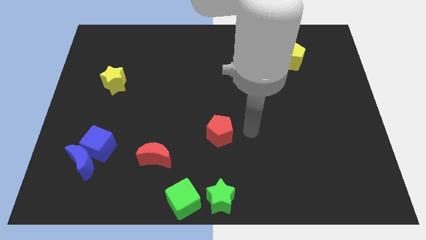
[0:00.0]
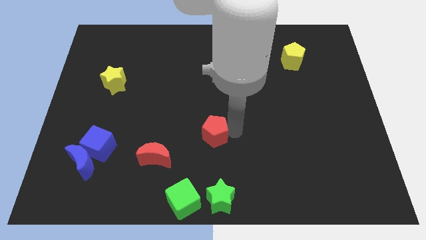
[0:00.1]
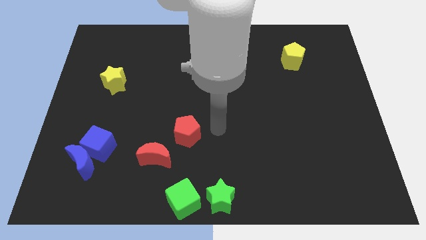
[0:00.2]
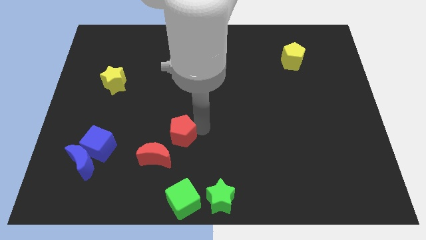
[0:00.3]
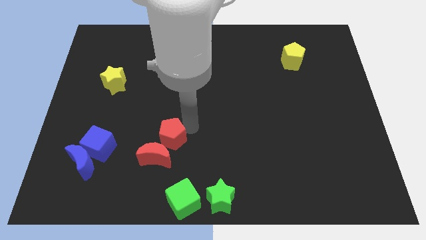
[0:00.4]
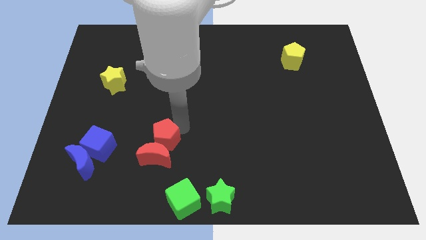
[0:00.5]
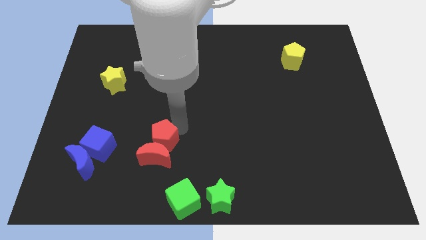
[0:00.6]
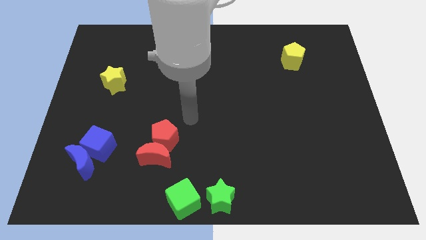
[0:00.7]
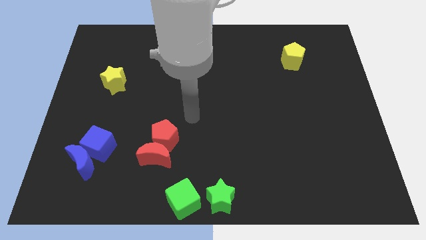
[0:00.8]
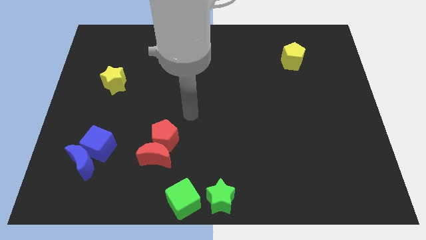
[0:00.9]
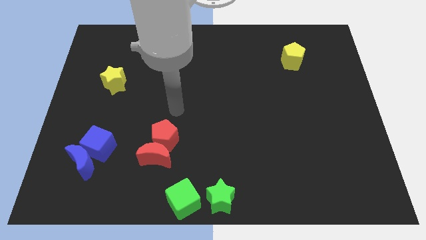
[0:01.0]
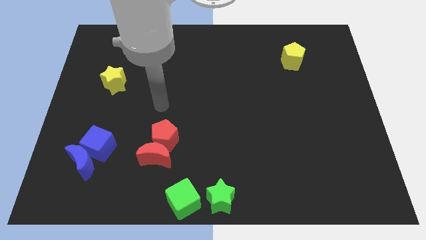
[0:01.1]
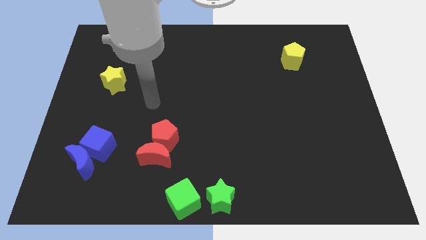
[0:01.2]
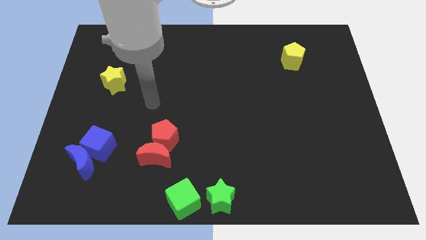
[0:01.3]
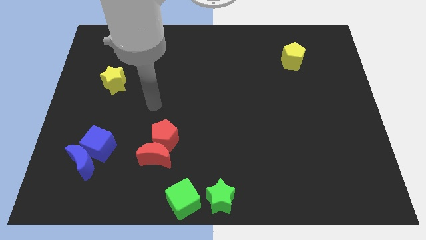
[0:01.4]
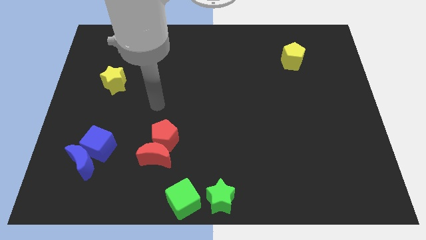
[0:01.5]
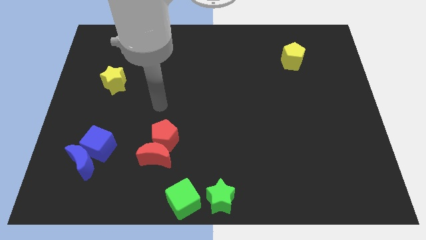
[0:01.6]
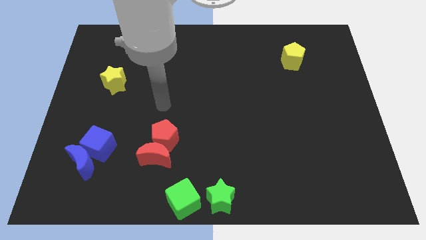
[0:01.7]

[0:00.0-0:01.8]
slide the red pentagon to the top right side of the red moon

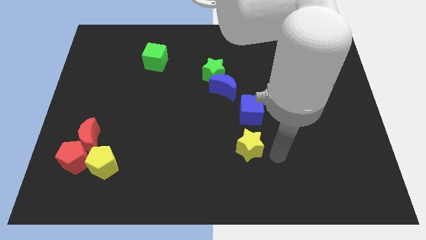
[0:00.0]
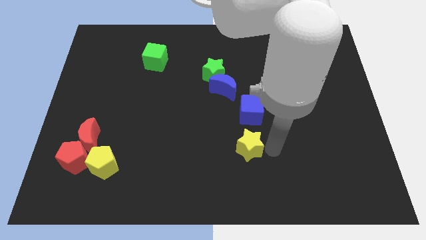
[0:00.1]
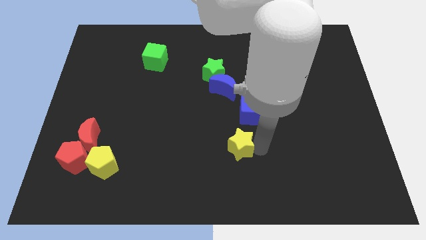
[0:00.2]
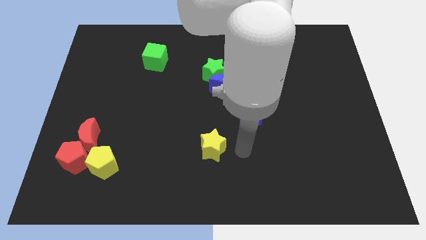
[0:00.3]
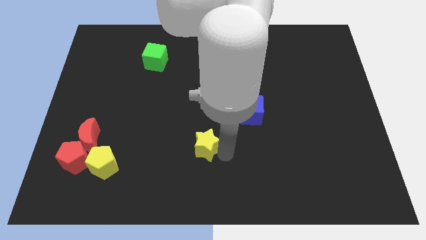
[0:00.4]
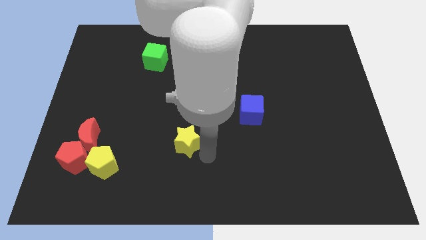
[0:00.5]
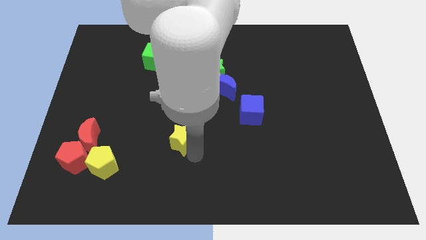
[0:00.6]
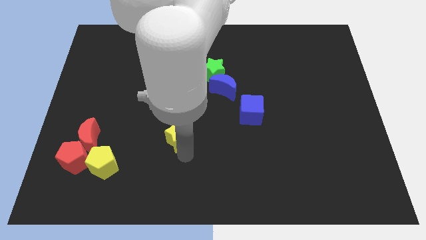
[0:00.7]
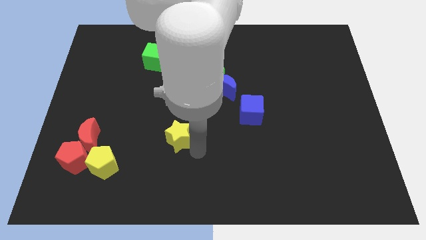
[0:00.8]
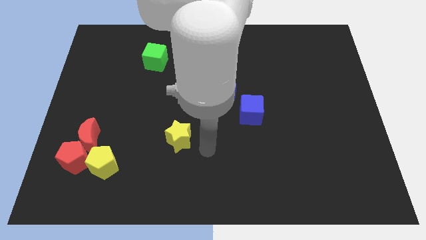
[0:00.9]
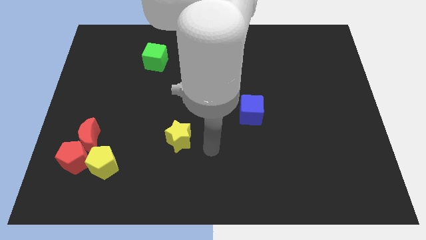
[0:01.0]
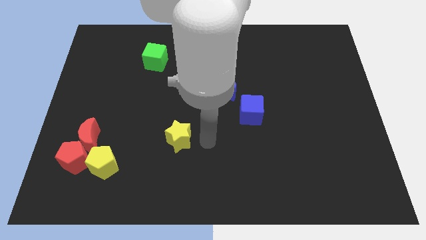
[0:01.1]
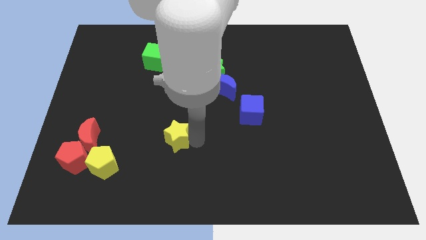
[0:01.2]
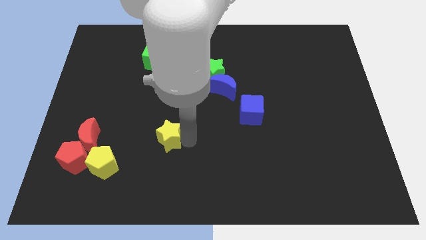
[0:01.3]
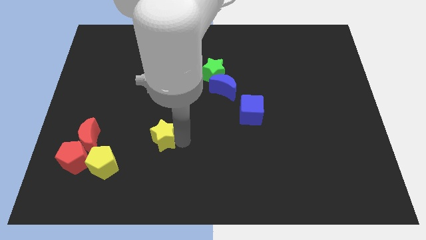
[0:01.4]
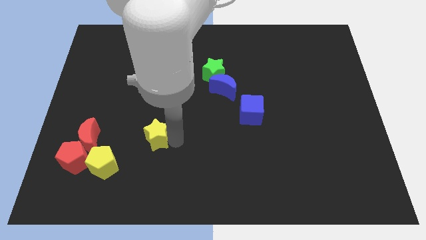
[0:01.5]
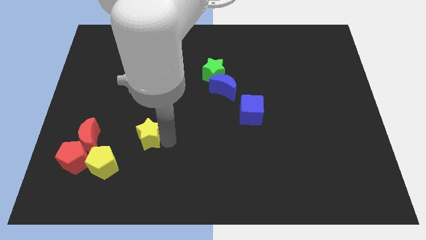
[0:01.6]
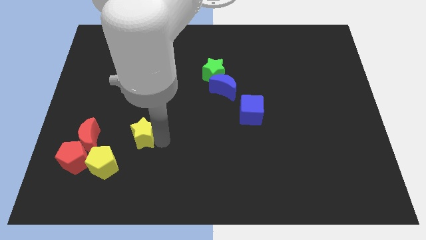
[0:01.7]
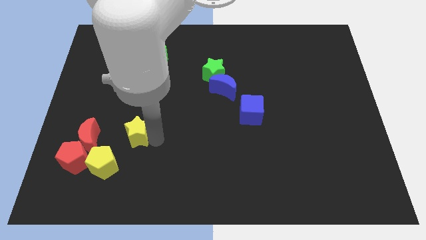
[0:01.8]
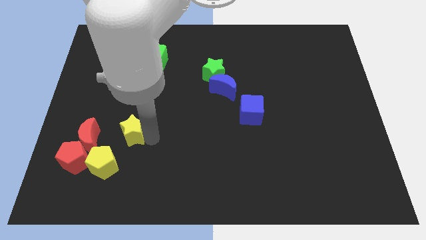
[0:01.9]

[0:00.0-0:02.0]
push the yellow star towards the right of the red crescent

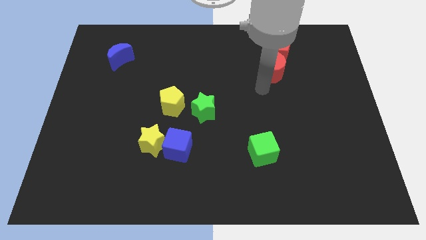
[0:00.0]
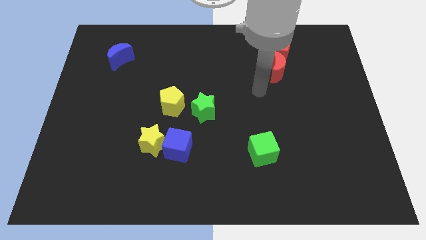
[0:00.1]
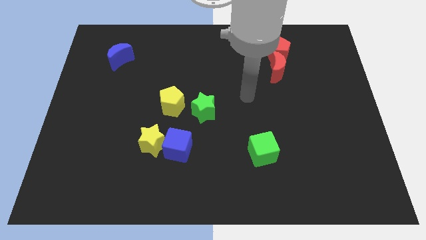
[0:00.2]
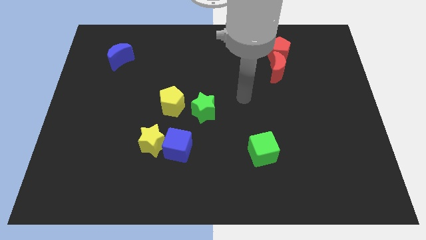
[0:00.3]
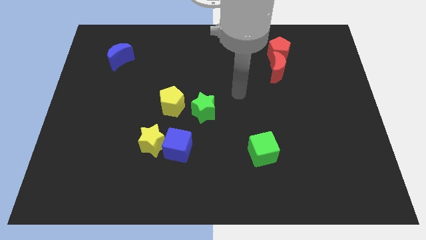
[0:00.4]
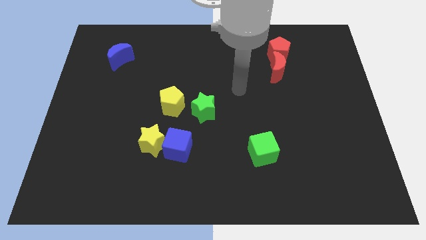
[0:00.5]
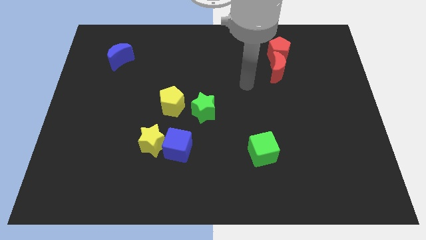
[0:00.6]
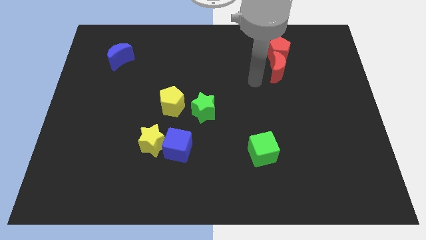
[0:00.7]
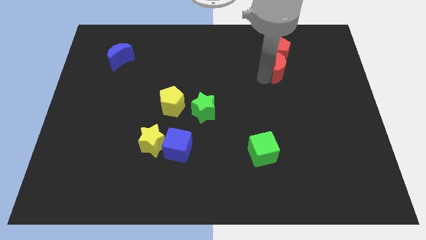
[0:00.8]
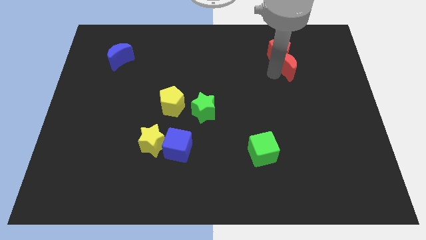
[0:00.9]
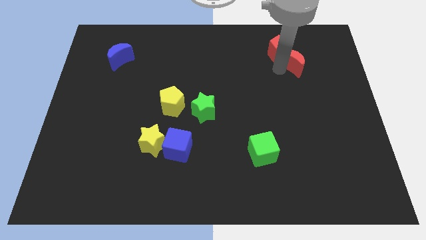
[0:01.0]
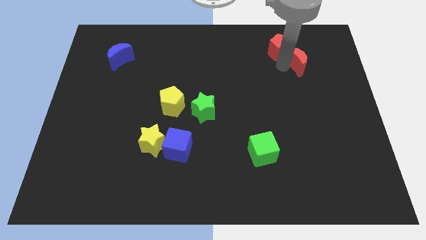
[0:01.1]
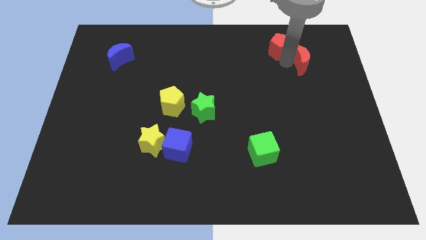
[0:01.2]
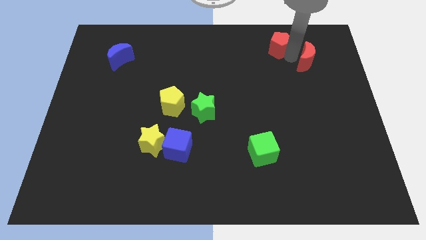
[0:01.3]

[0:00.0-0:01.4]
push the red crescent slightly to the right

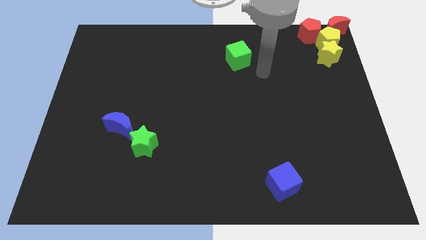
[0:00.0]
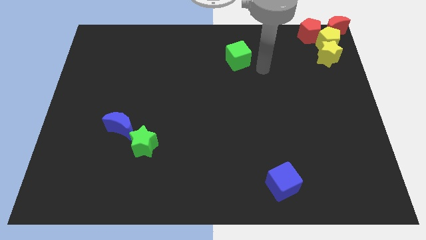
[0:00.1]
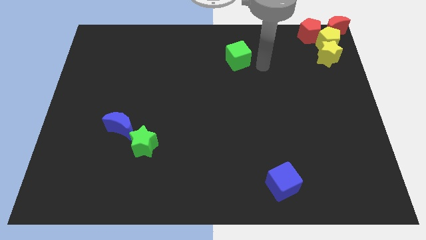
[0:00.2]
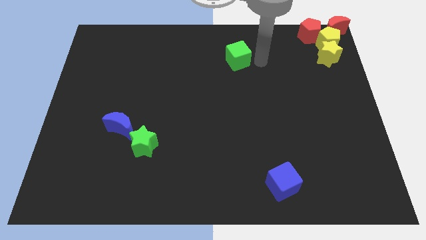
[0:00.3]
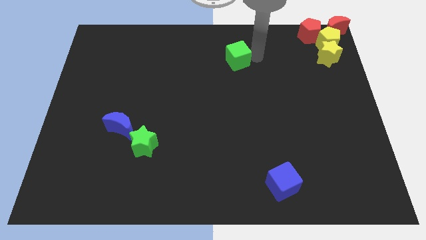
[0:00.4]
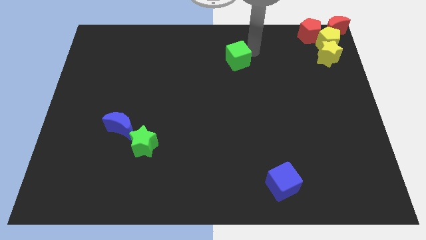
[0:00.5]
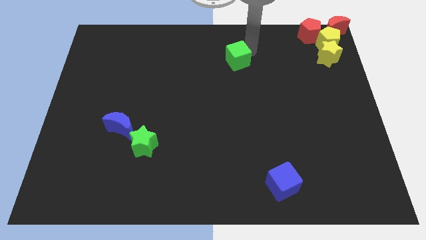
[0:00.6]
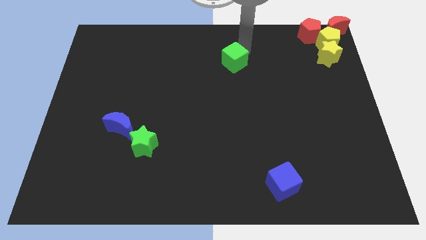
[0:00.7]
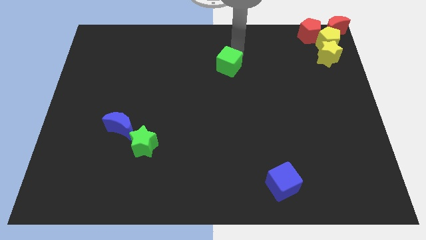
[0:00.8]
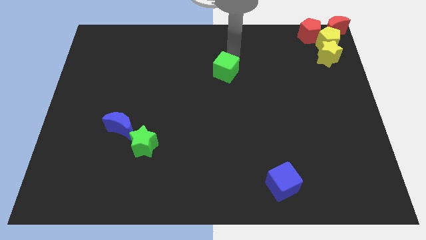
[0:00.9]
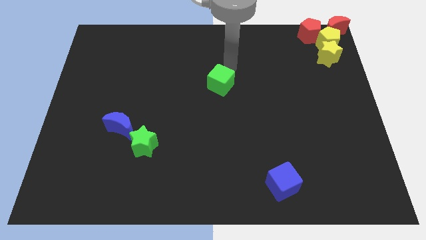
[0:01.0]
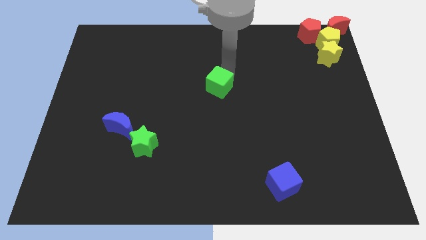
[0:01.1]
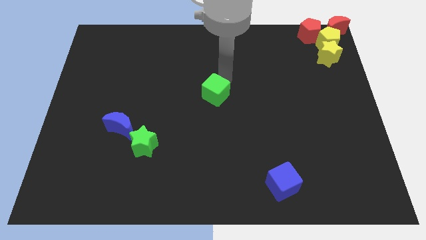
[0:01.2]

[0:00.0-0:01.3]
move the green cube towards the center of the board

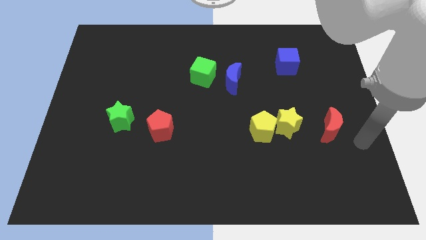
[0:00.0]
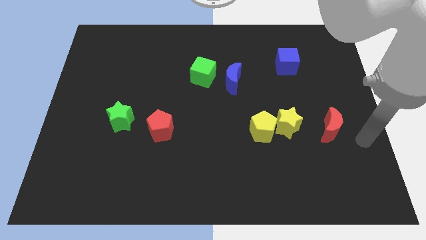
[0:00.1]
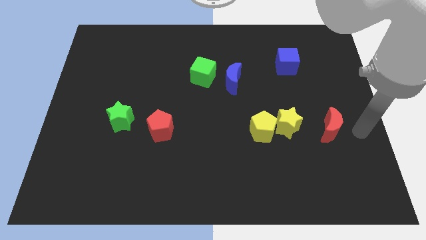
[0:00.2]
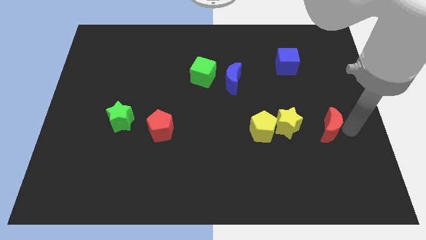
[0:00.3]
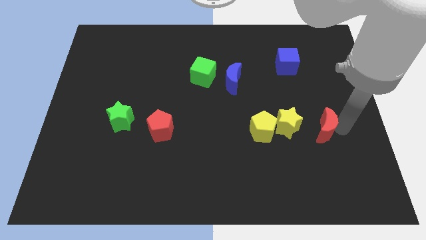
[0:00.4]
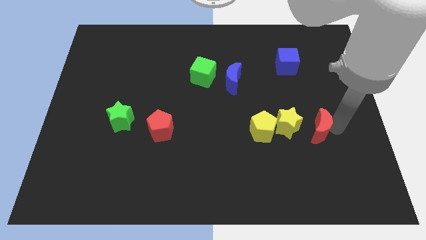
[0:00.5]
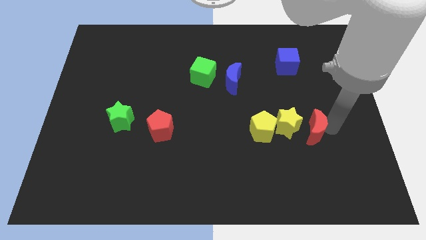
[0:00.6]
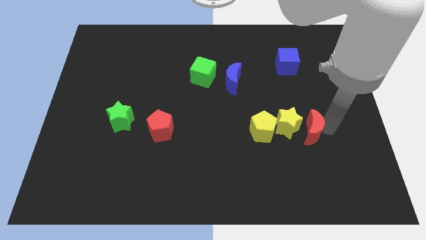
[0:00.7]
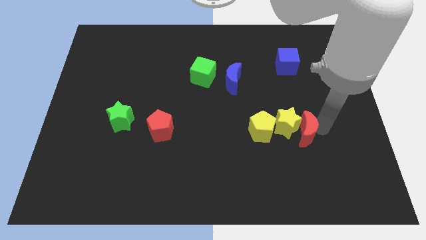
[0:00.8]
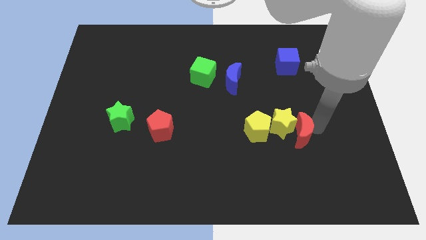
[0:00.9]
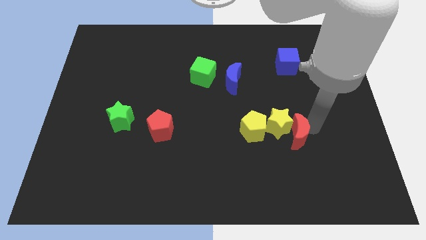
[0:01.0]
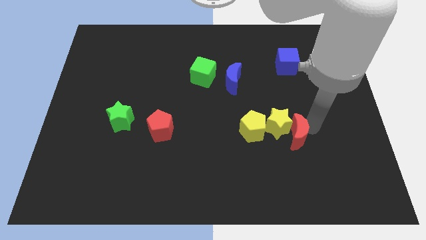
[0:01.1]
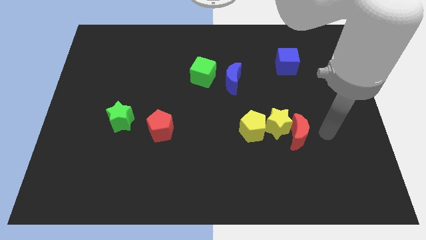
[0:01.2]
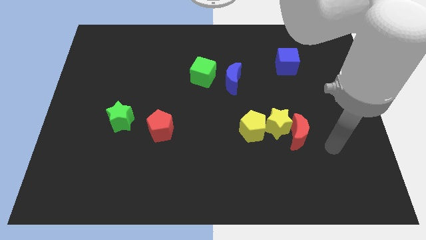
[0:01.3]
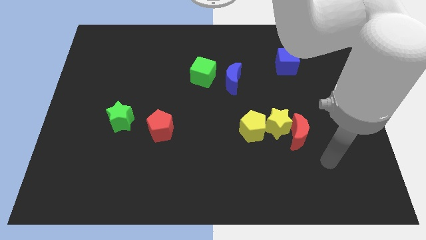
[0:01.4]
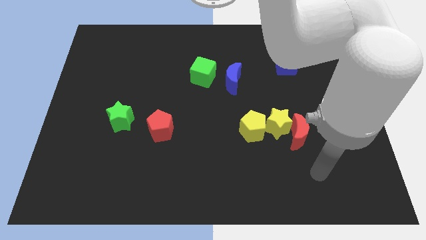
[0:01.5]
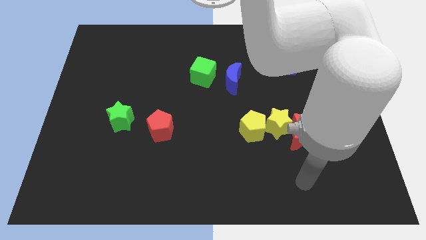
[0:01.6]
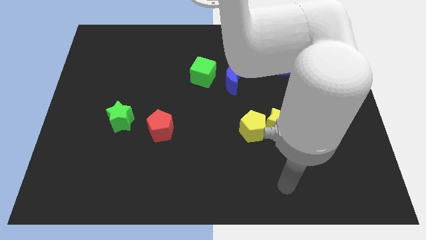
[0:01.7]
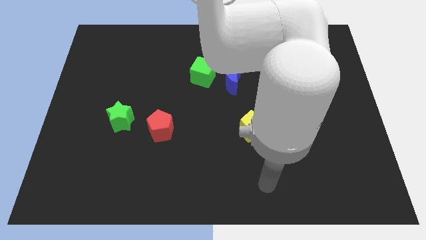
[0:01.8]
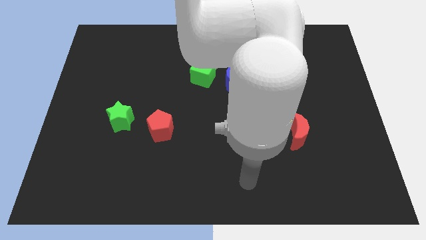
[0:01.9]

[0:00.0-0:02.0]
push the red moon into the yellow star

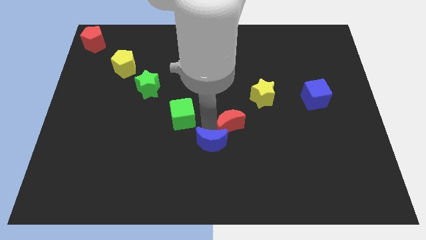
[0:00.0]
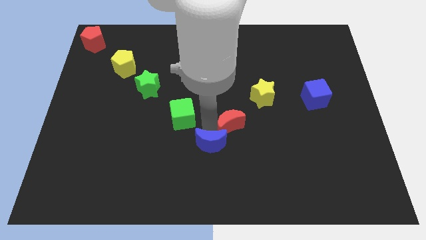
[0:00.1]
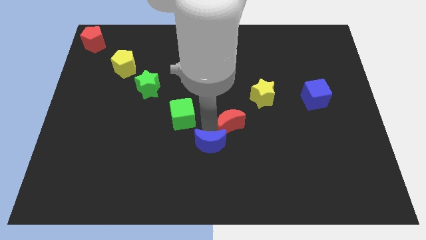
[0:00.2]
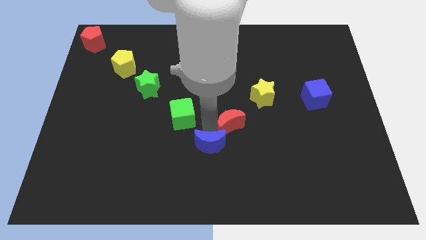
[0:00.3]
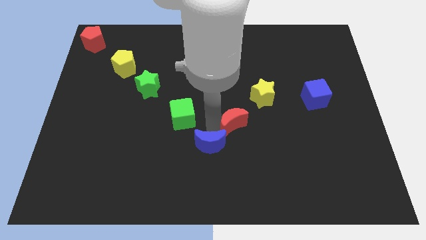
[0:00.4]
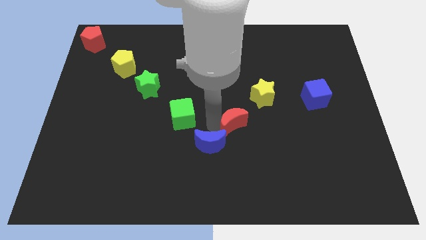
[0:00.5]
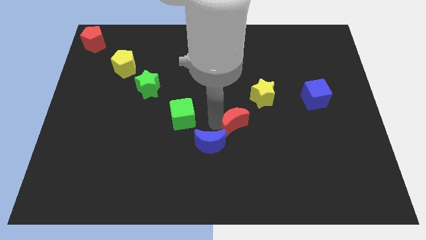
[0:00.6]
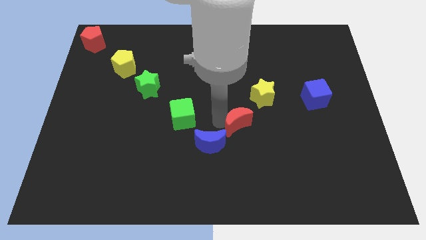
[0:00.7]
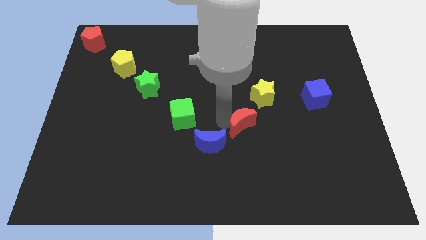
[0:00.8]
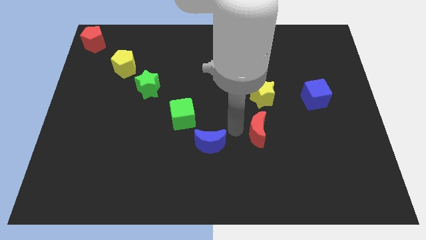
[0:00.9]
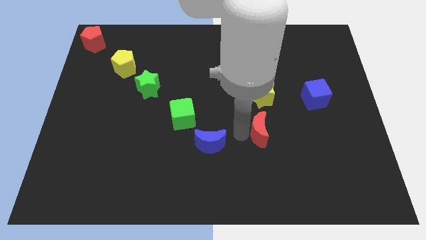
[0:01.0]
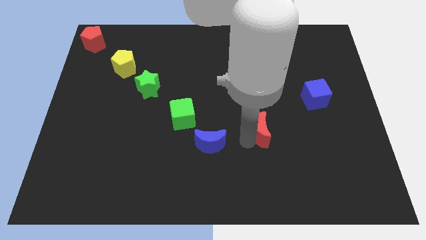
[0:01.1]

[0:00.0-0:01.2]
separate blue moon and red moon
